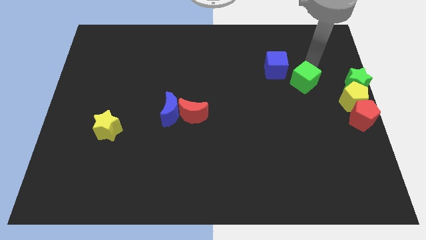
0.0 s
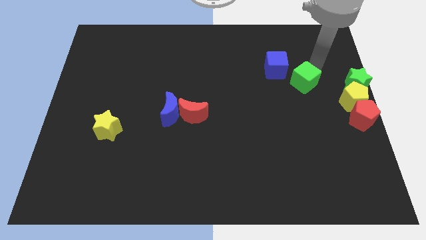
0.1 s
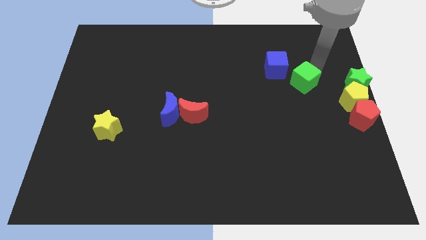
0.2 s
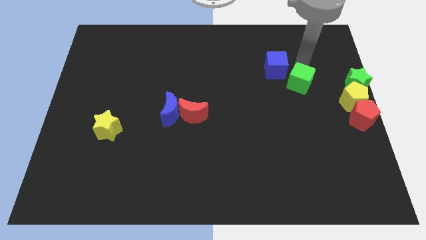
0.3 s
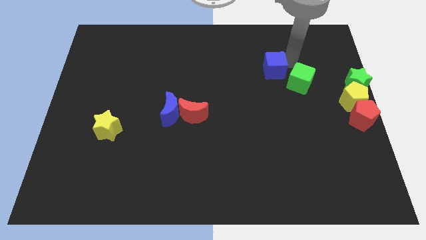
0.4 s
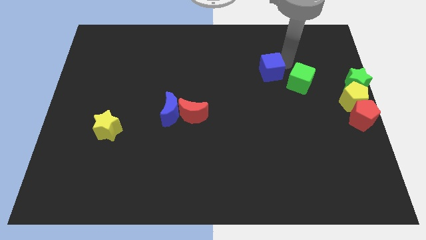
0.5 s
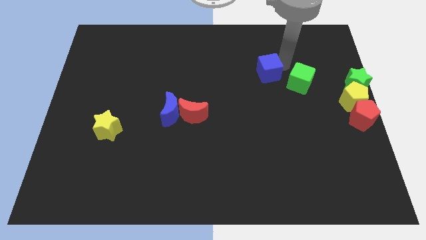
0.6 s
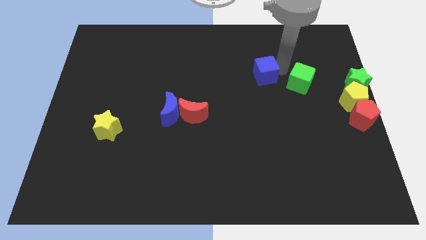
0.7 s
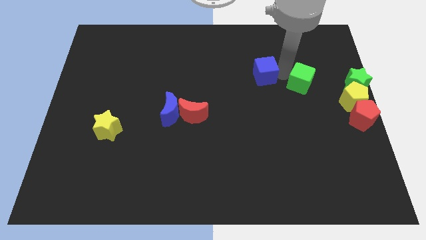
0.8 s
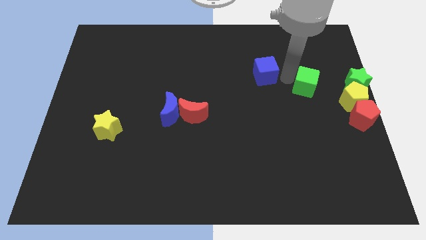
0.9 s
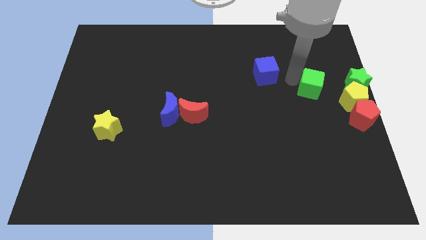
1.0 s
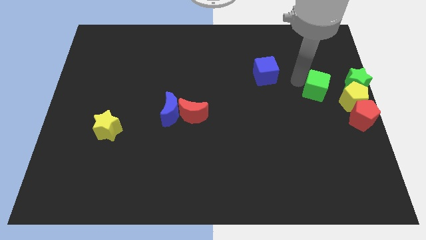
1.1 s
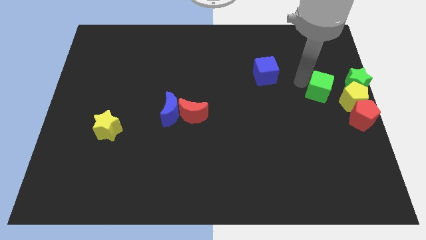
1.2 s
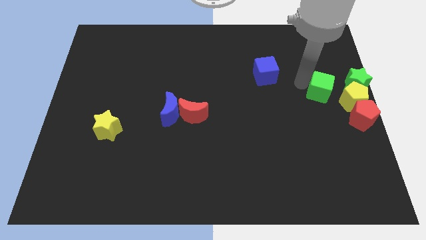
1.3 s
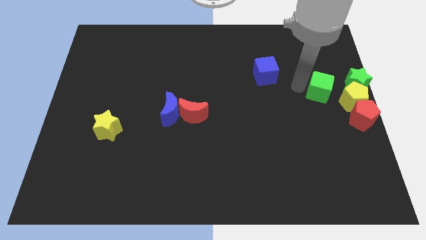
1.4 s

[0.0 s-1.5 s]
push the green cube away from the blue cube

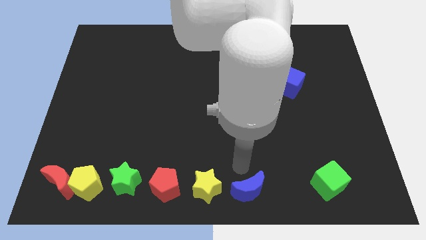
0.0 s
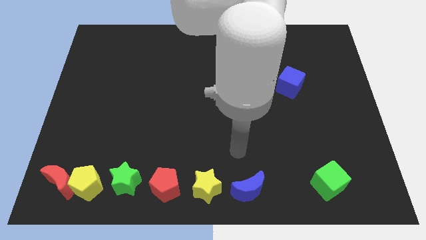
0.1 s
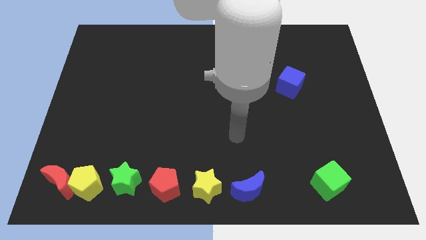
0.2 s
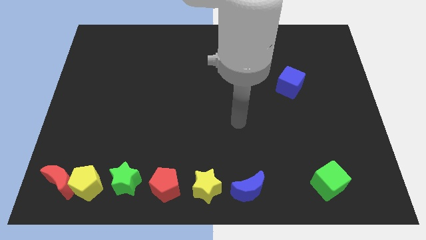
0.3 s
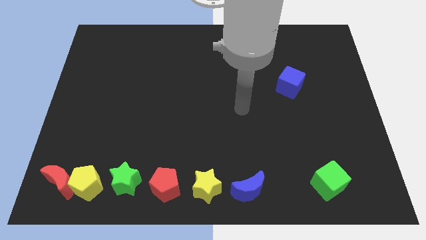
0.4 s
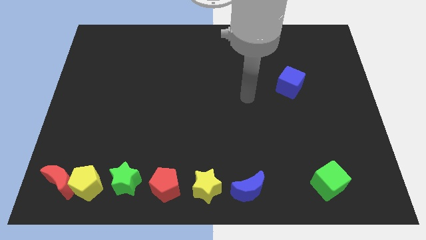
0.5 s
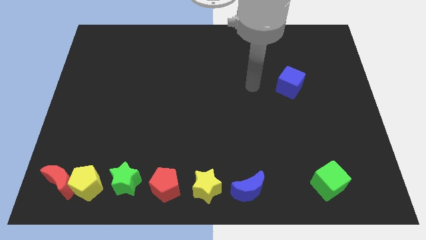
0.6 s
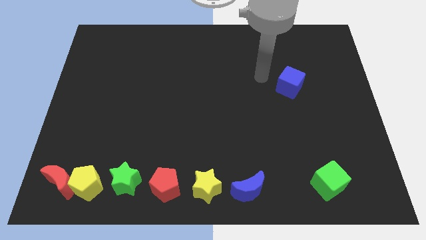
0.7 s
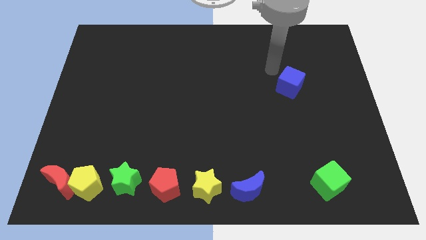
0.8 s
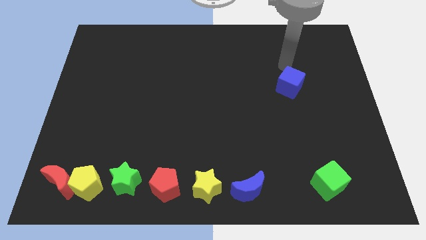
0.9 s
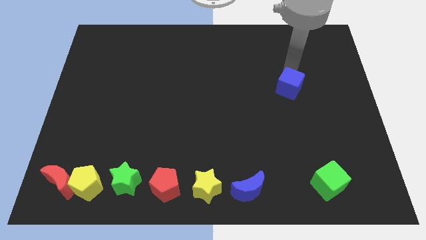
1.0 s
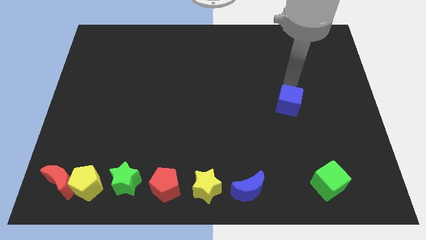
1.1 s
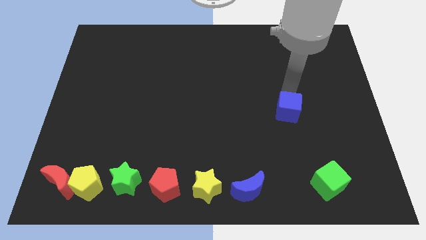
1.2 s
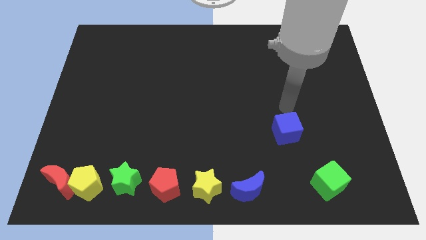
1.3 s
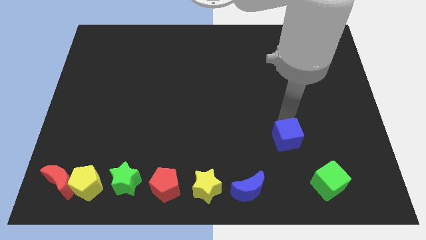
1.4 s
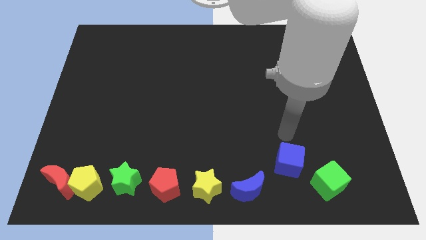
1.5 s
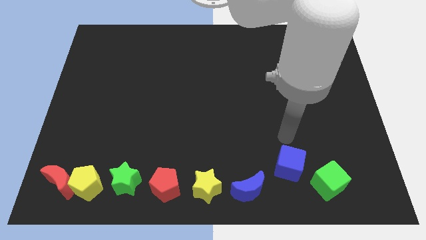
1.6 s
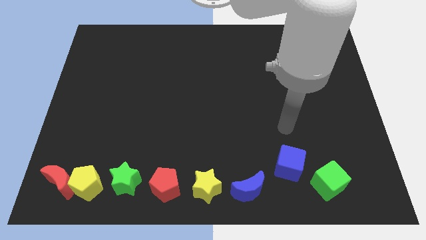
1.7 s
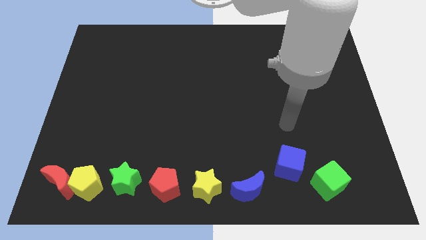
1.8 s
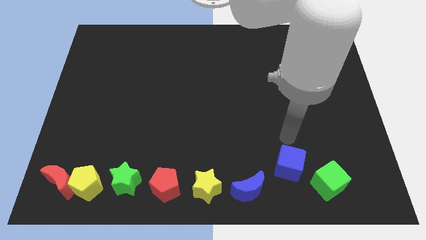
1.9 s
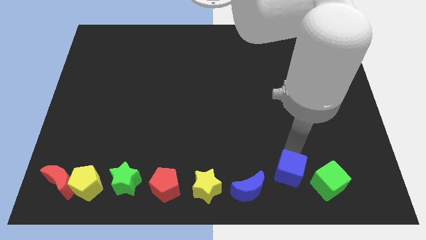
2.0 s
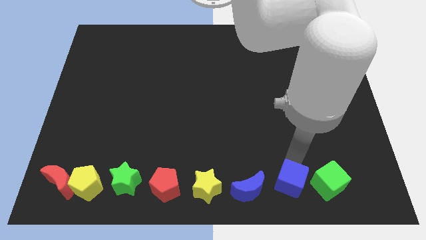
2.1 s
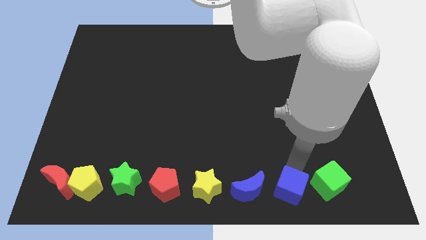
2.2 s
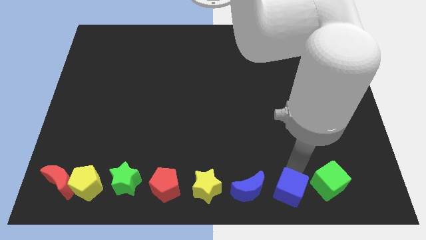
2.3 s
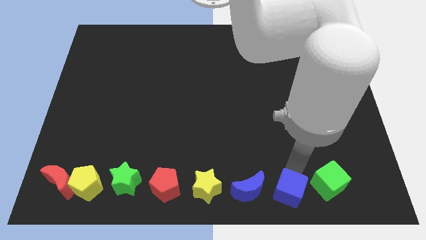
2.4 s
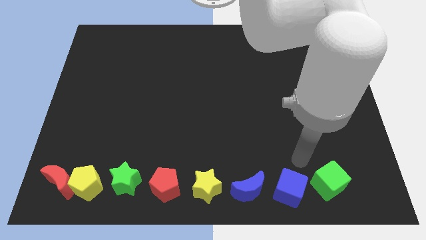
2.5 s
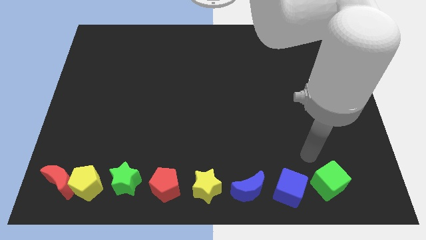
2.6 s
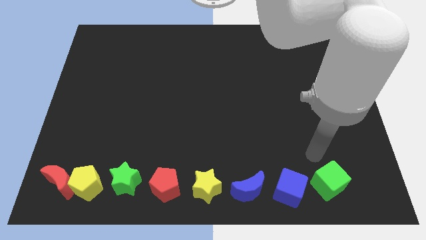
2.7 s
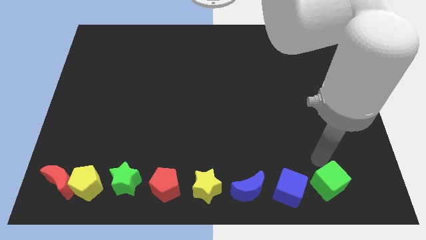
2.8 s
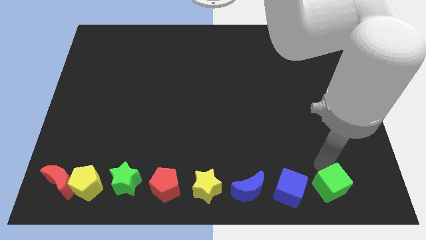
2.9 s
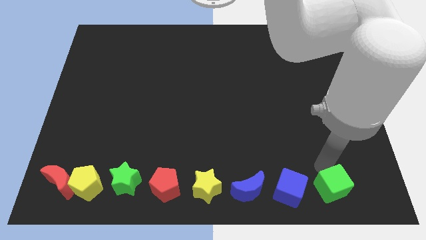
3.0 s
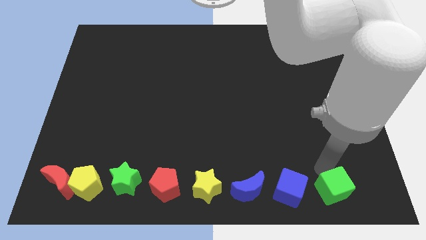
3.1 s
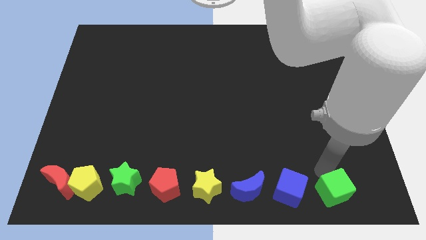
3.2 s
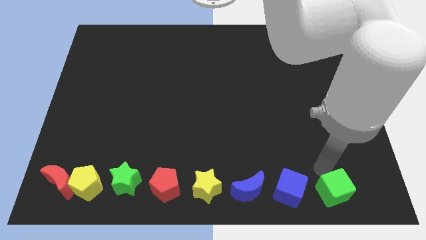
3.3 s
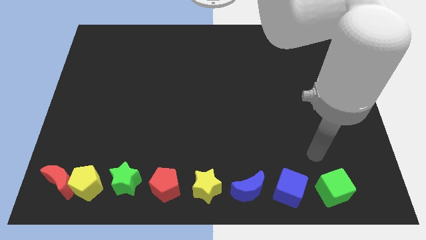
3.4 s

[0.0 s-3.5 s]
place blue cube between green cube and blue moon

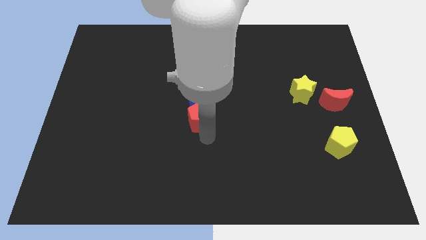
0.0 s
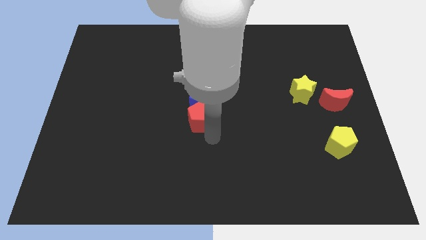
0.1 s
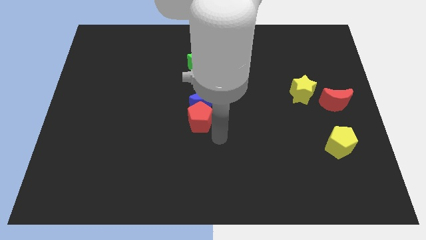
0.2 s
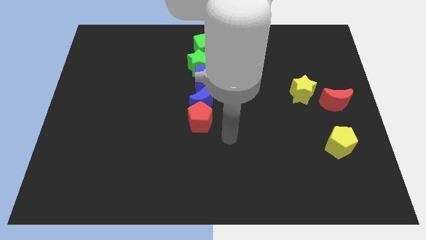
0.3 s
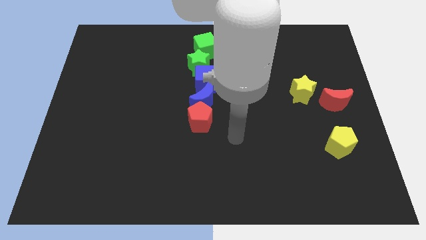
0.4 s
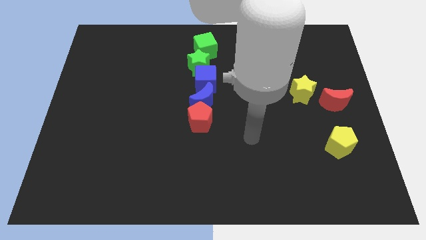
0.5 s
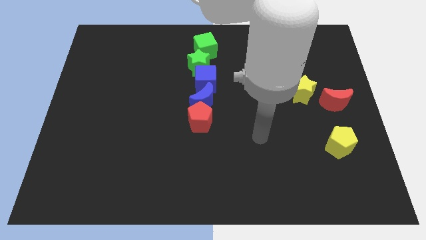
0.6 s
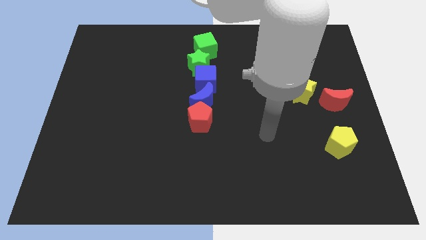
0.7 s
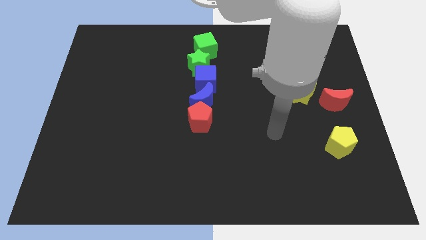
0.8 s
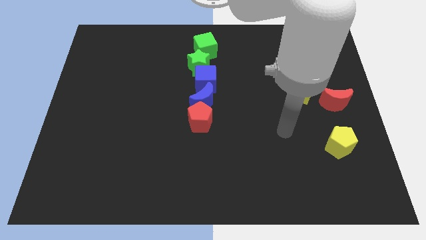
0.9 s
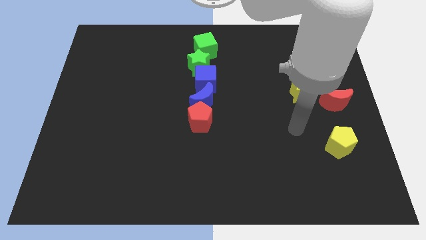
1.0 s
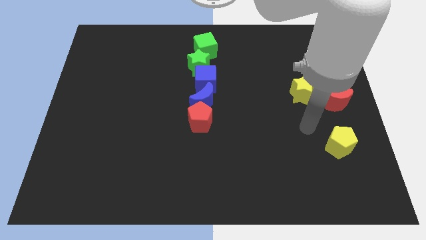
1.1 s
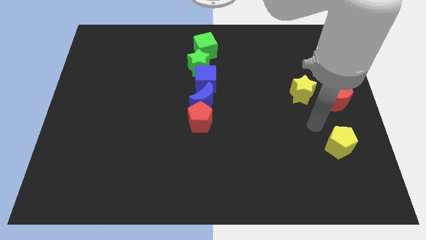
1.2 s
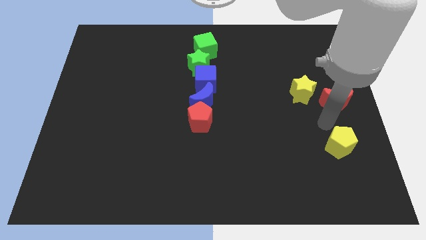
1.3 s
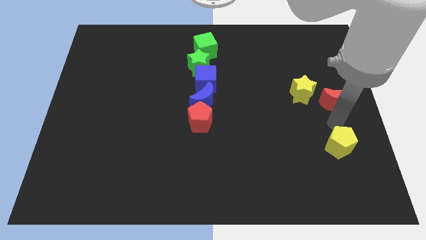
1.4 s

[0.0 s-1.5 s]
move the arm away from the red pentagon

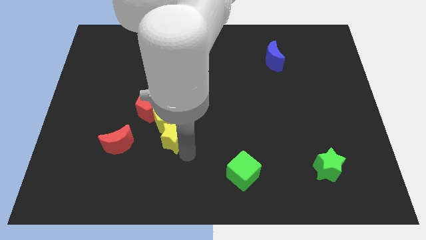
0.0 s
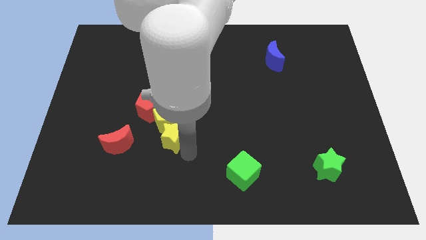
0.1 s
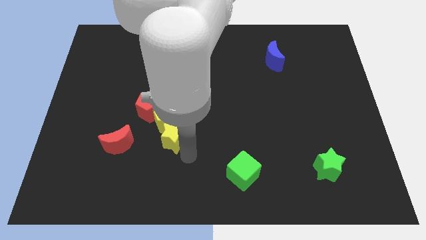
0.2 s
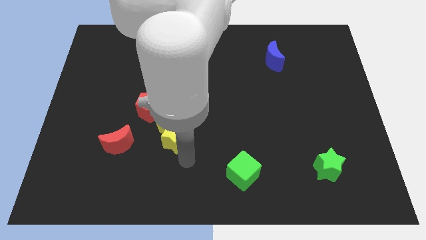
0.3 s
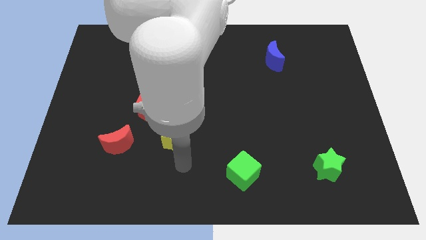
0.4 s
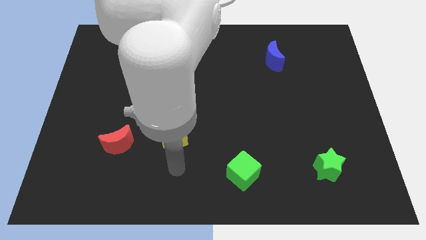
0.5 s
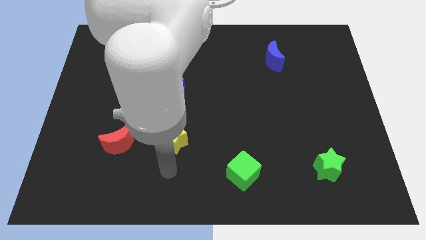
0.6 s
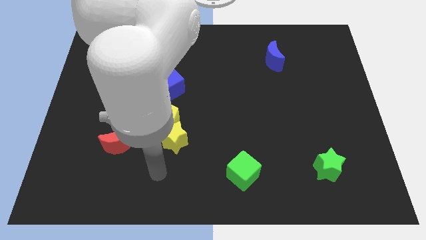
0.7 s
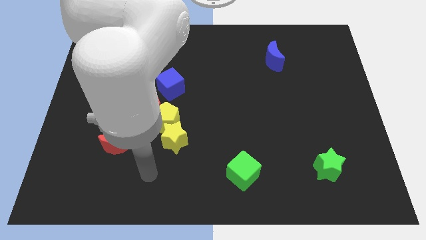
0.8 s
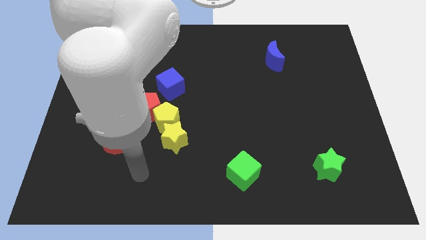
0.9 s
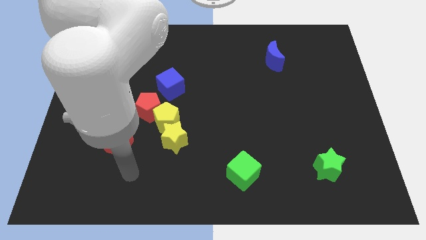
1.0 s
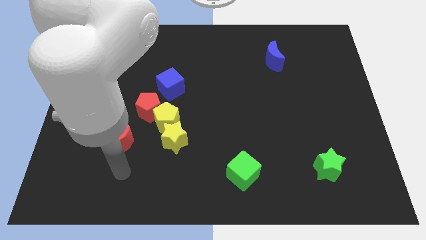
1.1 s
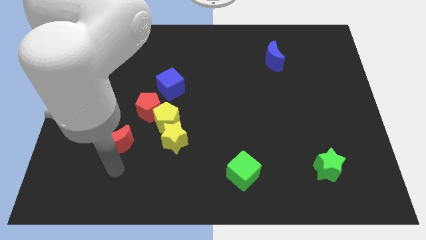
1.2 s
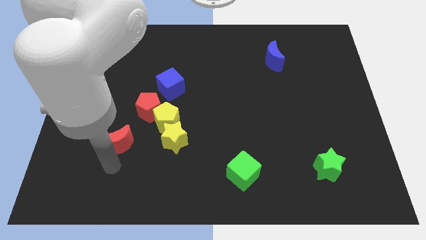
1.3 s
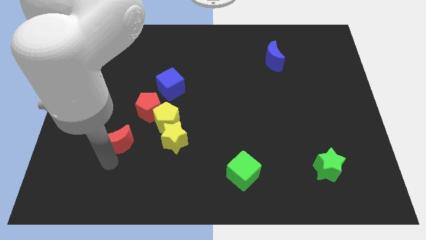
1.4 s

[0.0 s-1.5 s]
move your arm to the bottom of the red crescent

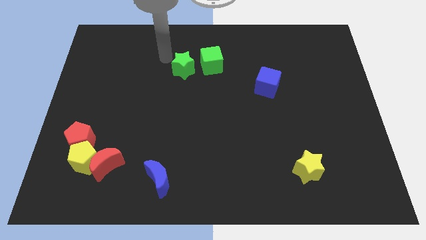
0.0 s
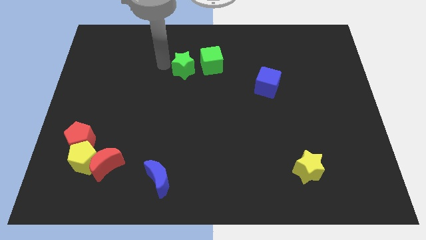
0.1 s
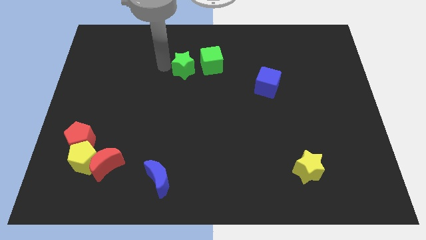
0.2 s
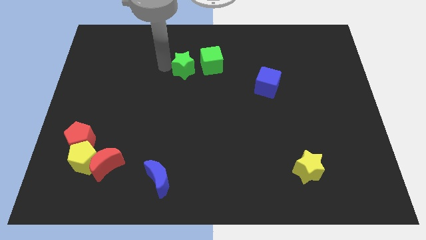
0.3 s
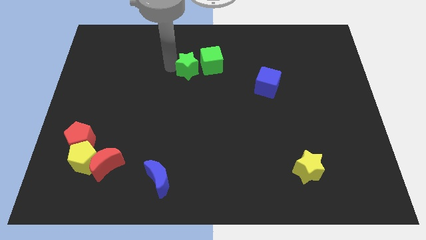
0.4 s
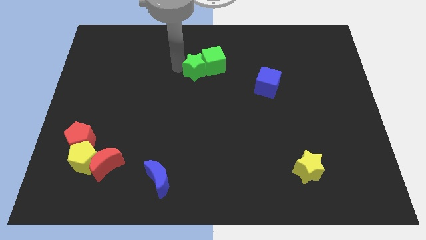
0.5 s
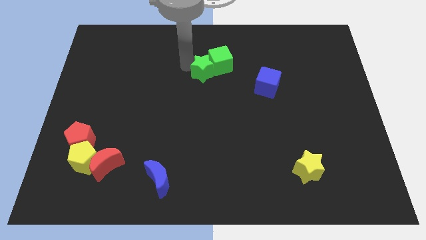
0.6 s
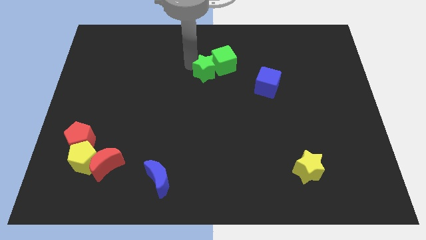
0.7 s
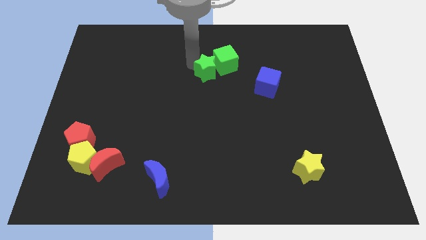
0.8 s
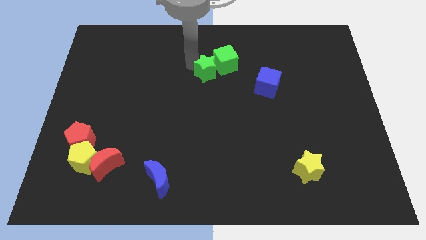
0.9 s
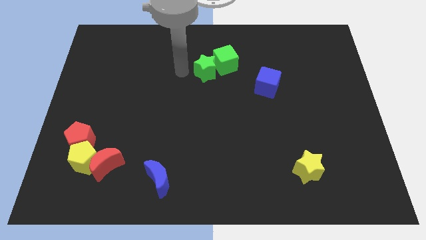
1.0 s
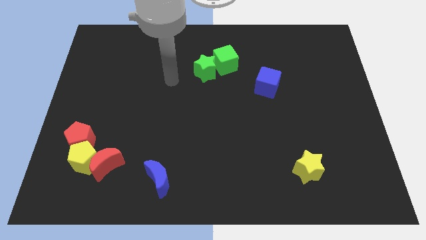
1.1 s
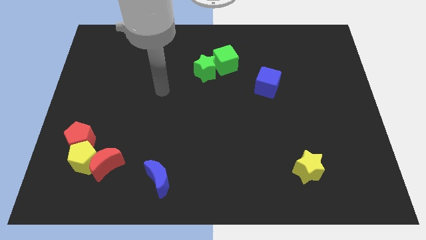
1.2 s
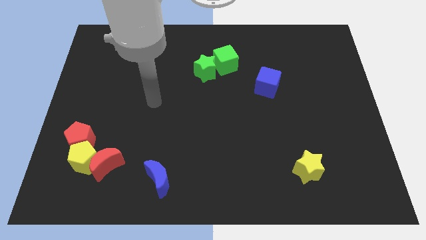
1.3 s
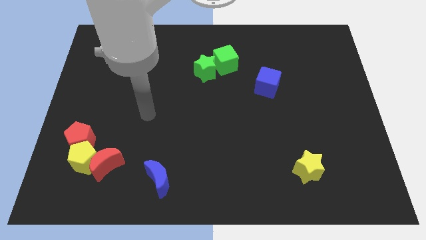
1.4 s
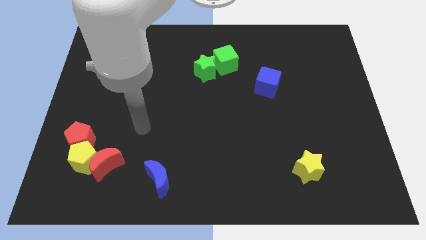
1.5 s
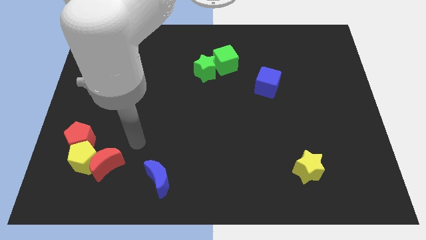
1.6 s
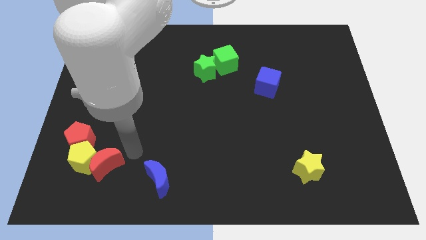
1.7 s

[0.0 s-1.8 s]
push green star into green cube
